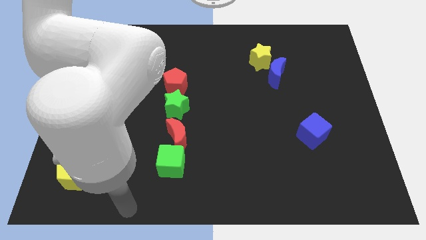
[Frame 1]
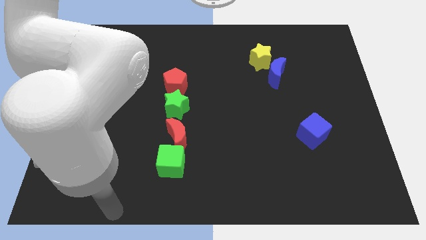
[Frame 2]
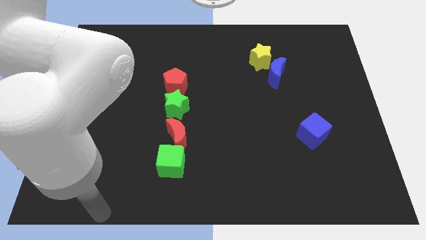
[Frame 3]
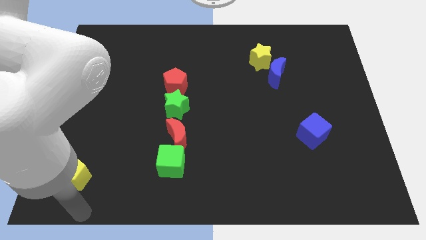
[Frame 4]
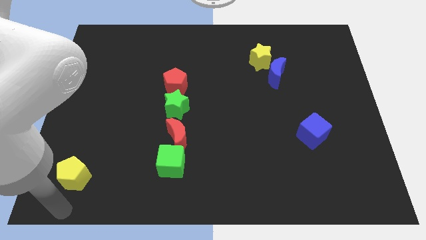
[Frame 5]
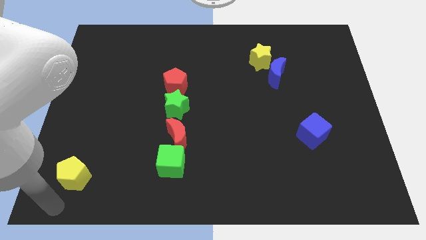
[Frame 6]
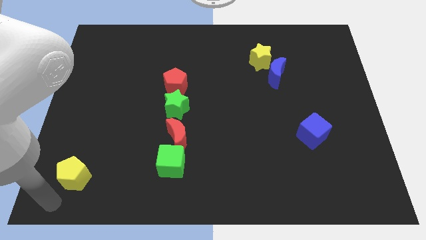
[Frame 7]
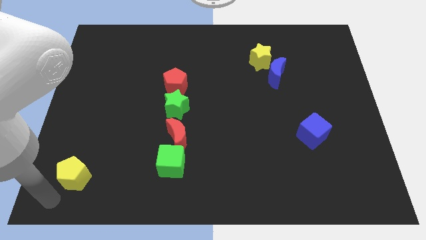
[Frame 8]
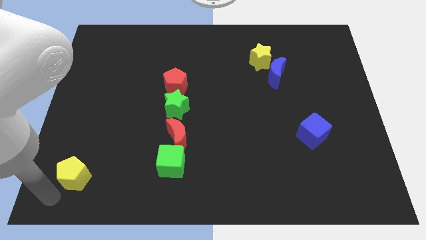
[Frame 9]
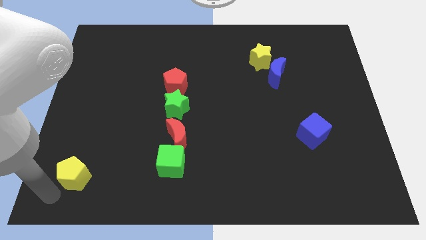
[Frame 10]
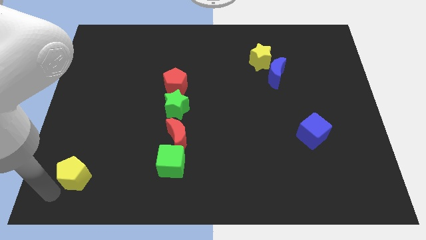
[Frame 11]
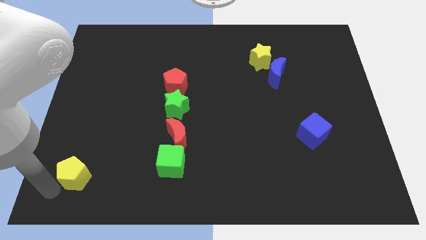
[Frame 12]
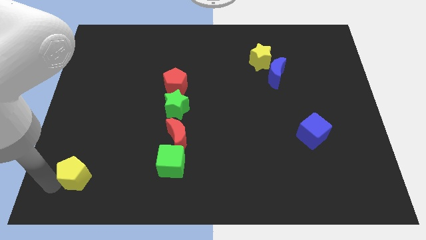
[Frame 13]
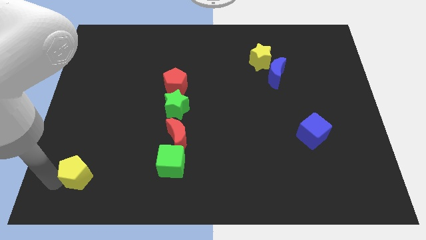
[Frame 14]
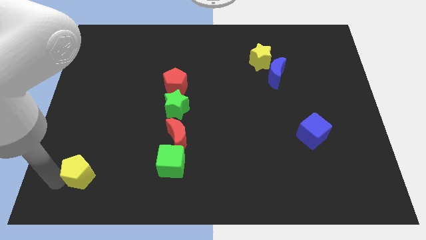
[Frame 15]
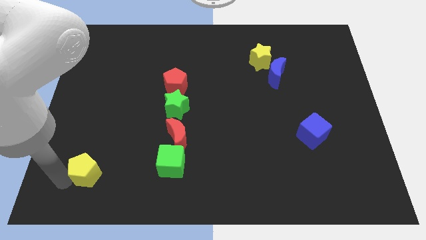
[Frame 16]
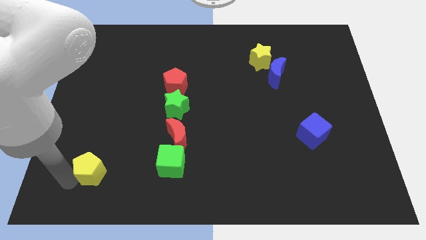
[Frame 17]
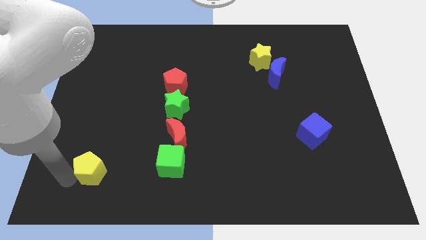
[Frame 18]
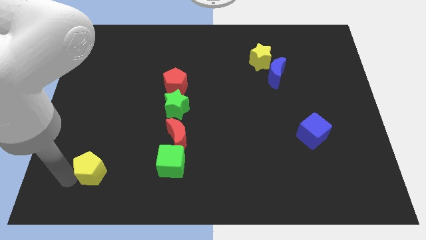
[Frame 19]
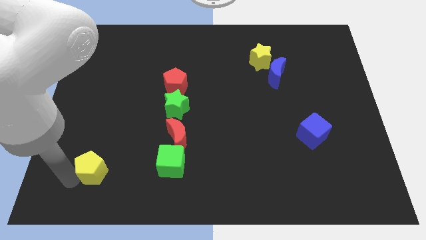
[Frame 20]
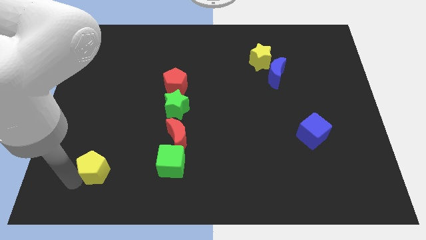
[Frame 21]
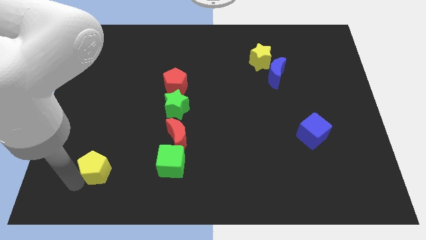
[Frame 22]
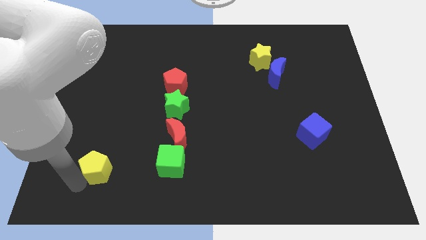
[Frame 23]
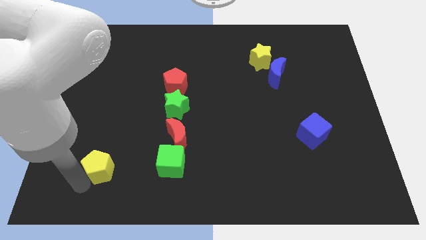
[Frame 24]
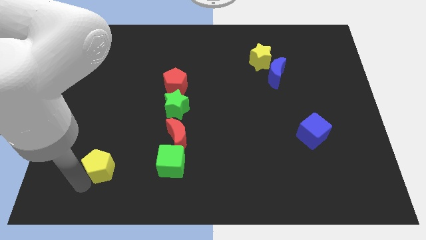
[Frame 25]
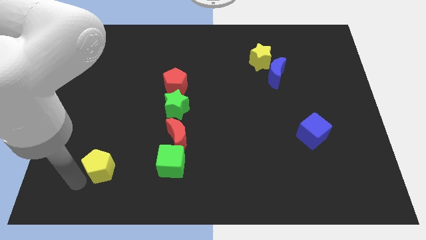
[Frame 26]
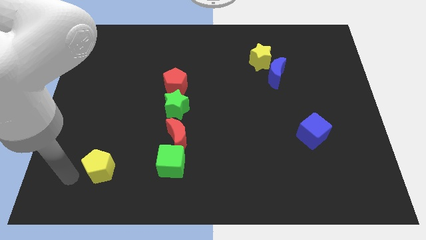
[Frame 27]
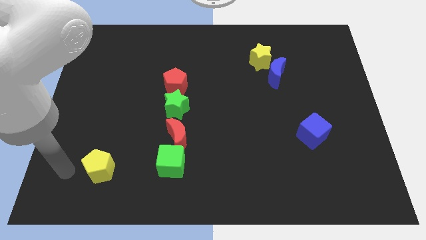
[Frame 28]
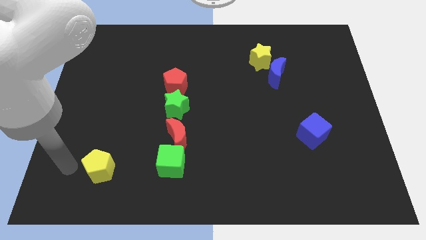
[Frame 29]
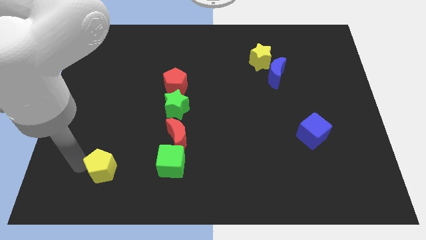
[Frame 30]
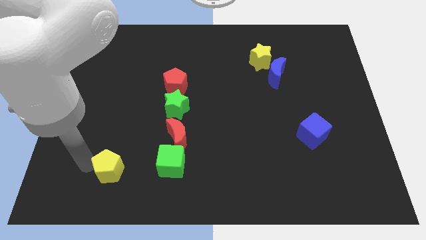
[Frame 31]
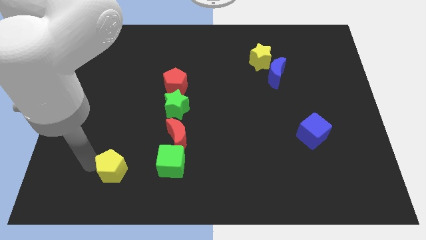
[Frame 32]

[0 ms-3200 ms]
push the yellow pentagon towards the green cube

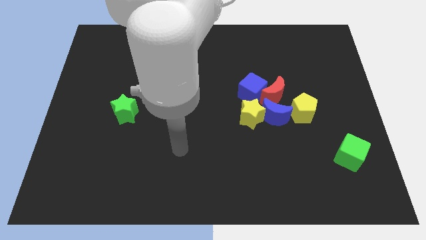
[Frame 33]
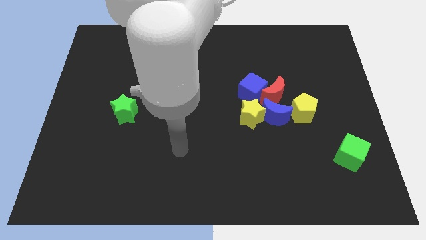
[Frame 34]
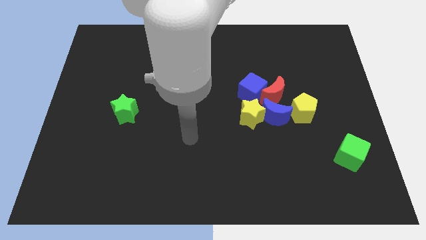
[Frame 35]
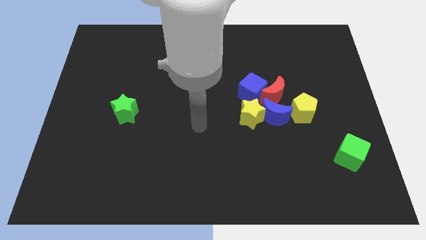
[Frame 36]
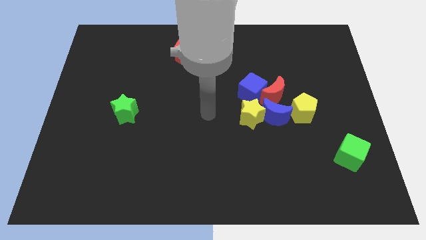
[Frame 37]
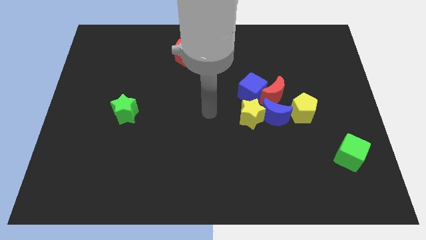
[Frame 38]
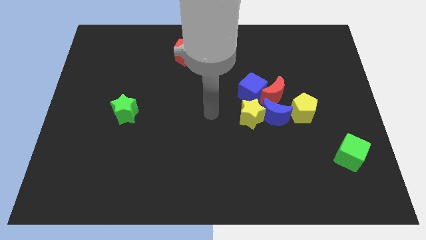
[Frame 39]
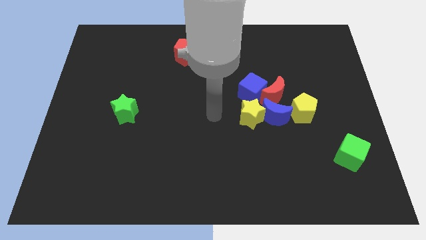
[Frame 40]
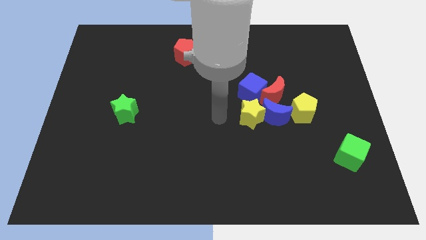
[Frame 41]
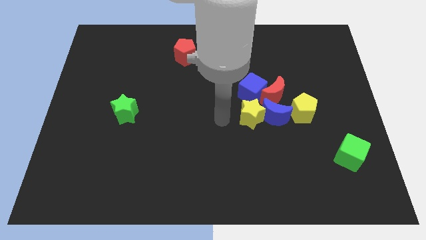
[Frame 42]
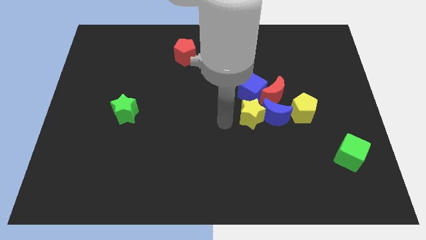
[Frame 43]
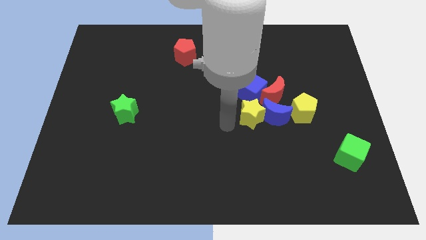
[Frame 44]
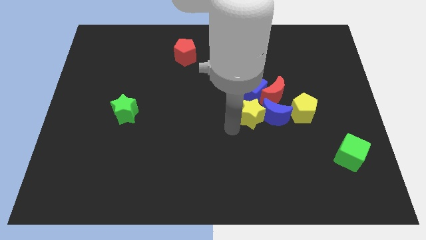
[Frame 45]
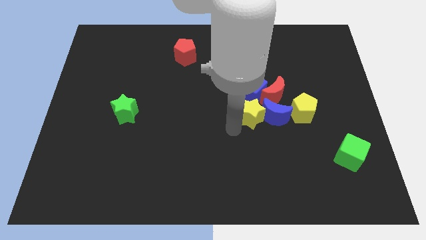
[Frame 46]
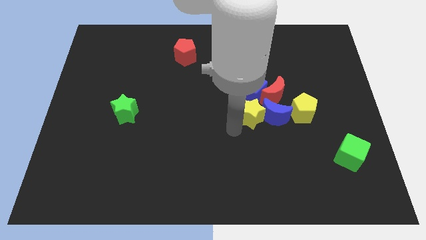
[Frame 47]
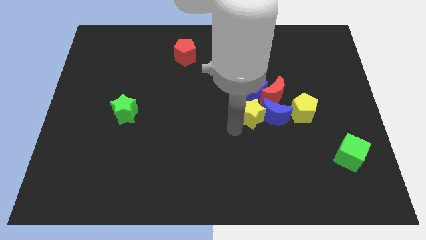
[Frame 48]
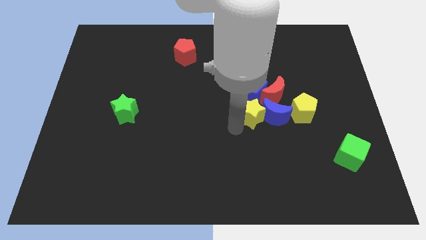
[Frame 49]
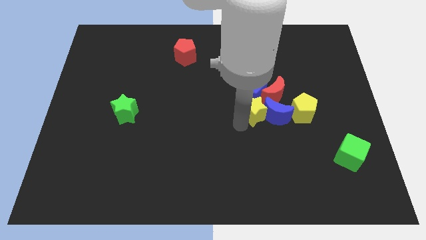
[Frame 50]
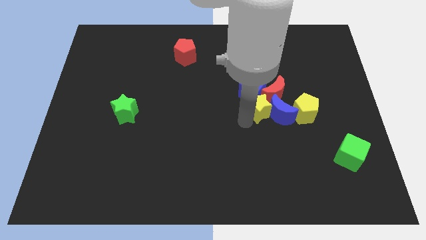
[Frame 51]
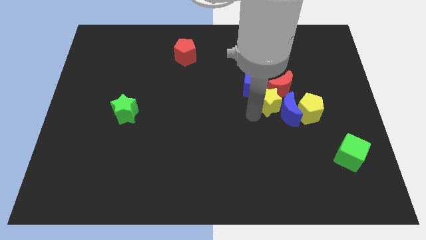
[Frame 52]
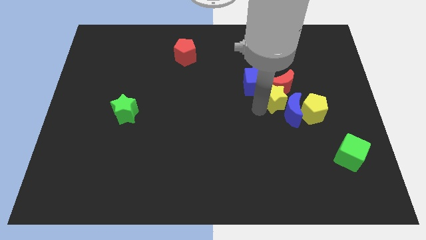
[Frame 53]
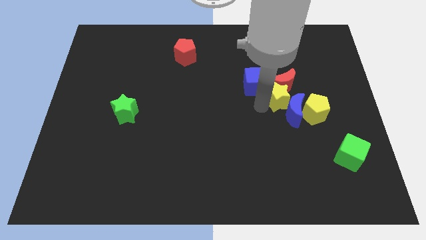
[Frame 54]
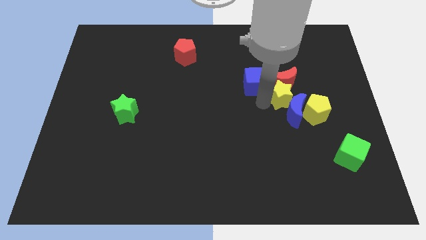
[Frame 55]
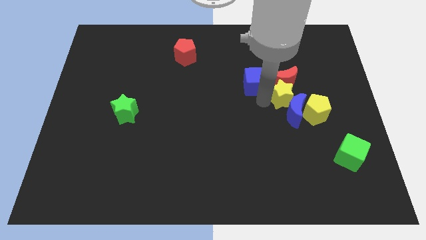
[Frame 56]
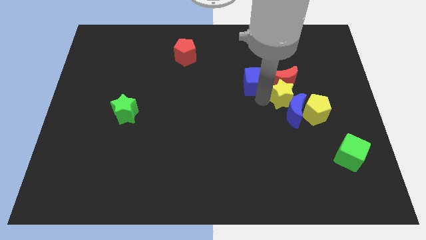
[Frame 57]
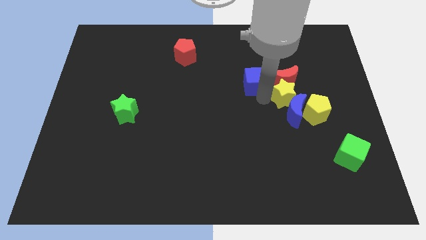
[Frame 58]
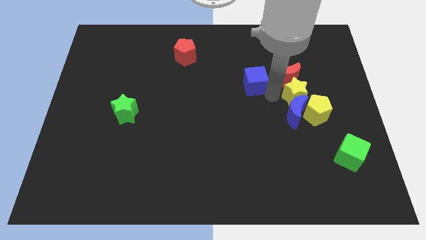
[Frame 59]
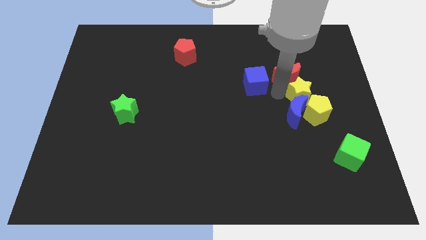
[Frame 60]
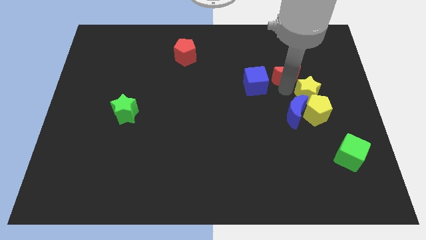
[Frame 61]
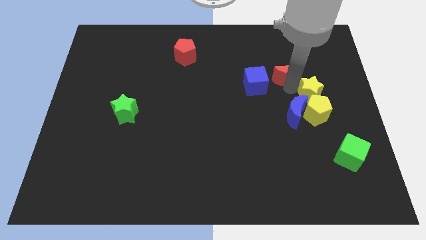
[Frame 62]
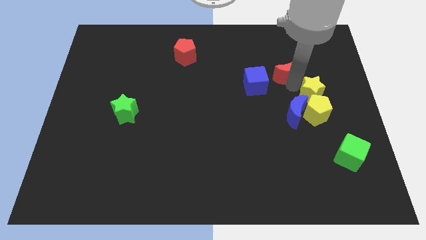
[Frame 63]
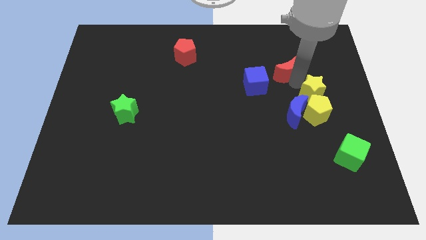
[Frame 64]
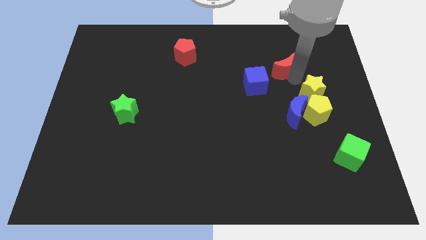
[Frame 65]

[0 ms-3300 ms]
place yellow star on top of yellow pentagon

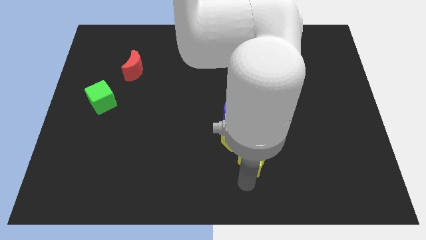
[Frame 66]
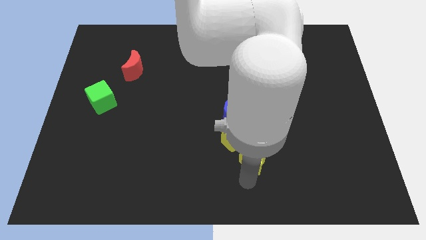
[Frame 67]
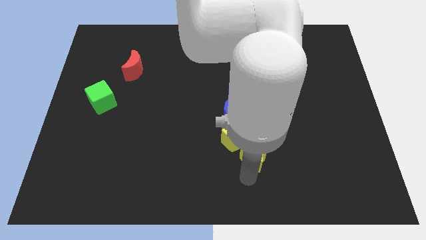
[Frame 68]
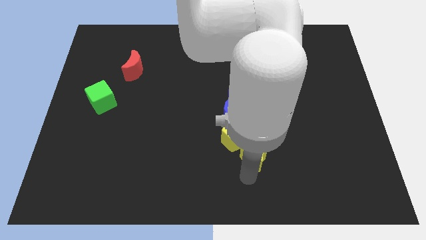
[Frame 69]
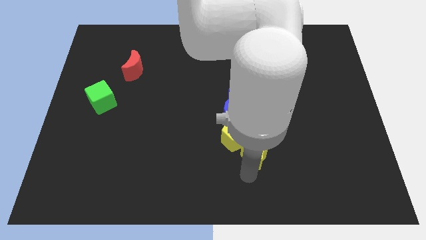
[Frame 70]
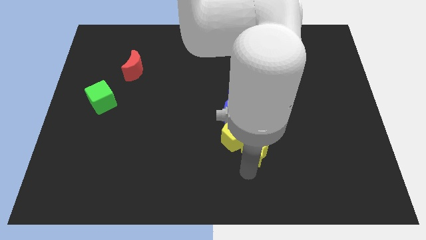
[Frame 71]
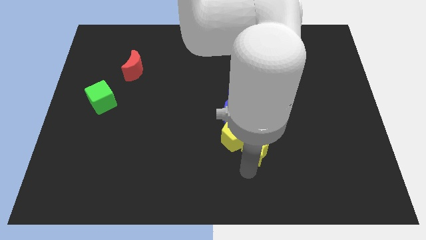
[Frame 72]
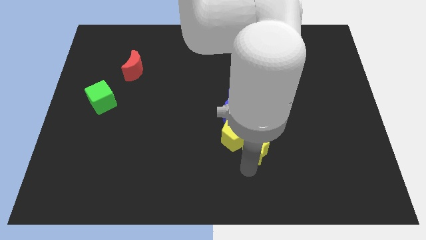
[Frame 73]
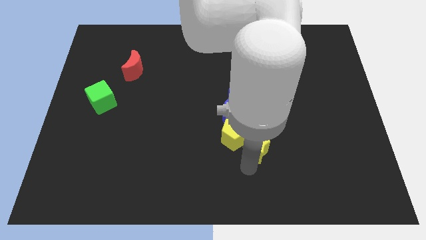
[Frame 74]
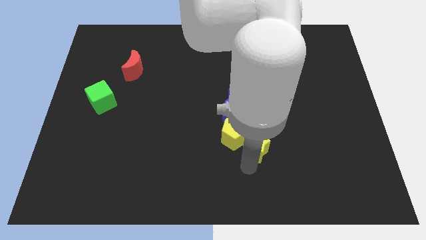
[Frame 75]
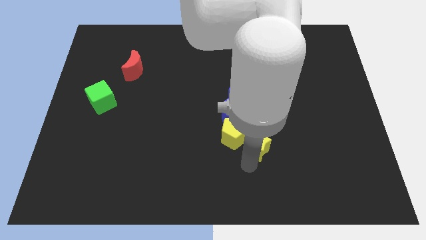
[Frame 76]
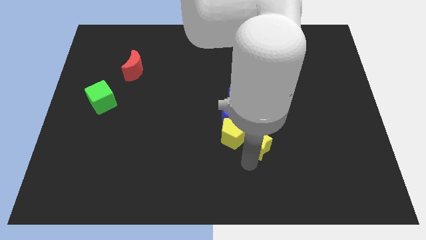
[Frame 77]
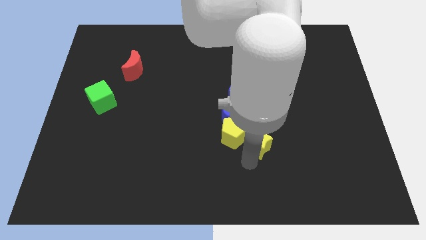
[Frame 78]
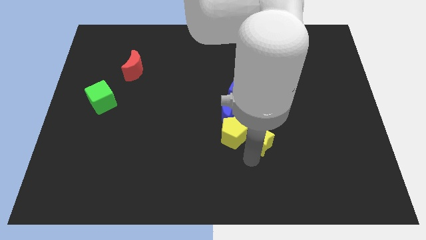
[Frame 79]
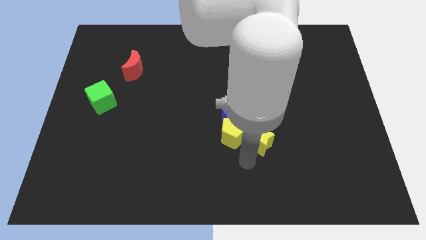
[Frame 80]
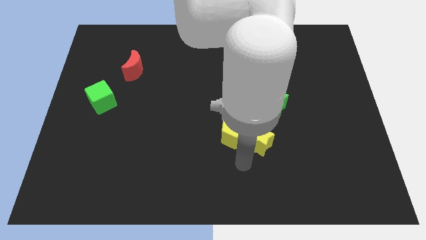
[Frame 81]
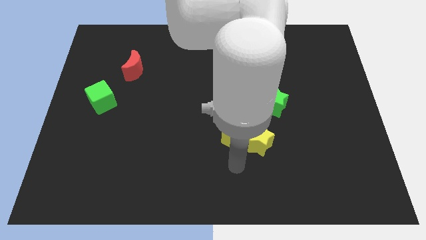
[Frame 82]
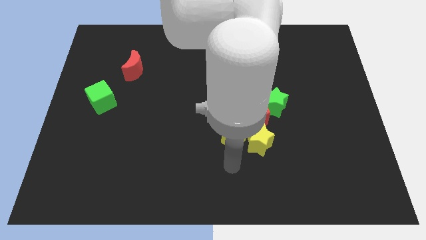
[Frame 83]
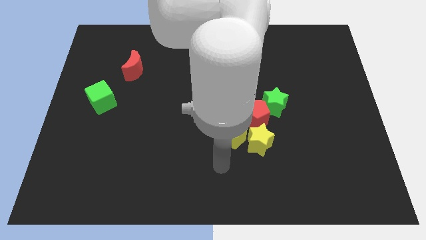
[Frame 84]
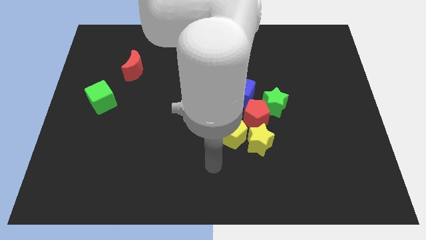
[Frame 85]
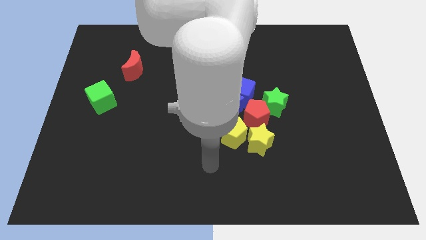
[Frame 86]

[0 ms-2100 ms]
move yellow star to the right of yellow pentagon

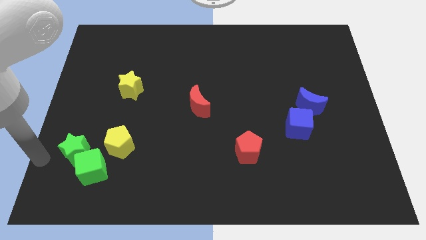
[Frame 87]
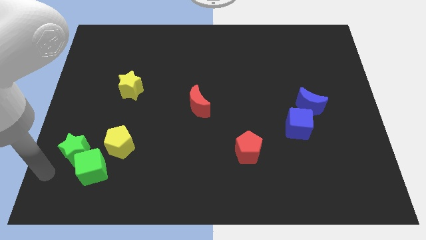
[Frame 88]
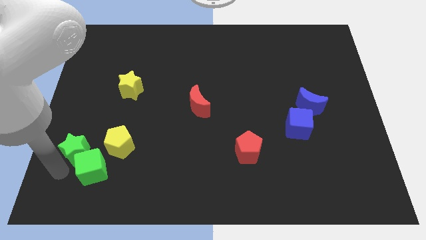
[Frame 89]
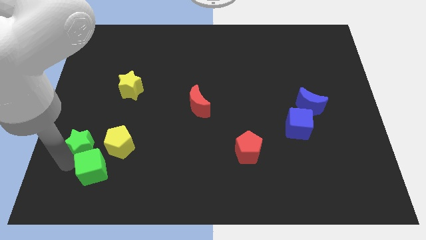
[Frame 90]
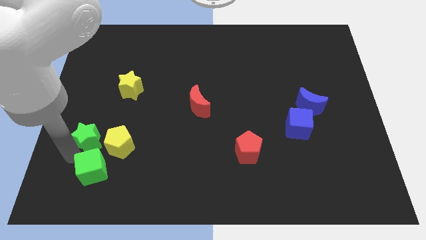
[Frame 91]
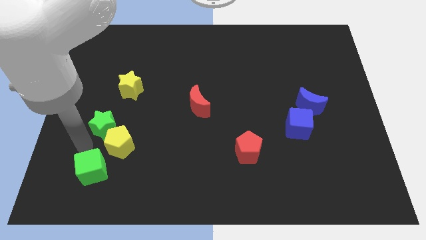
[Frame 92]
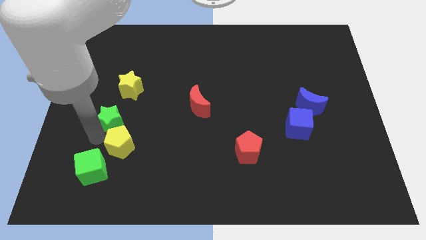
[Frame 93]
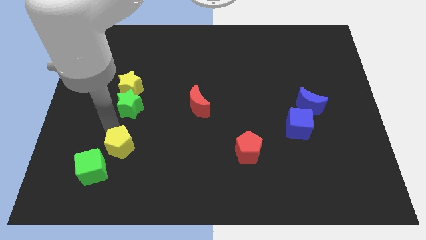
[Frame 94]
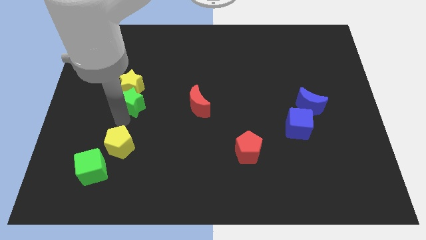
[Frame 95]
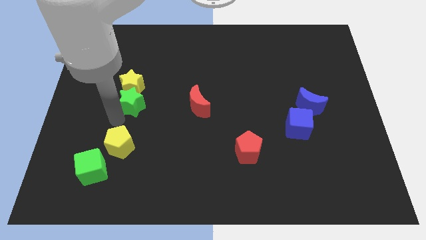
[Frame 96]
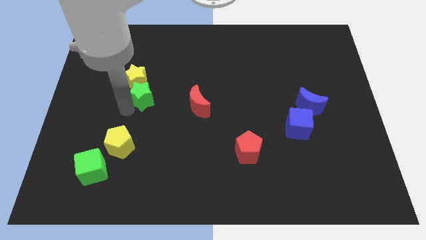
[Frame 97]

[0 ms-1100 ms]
push the green star towards the yellow star
